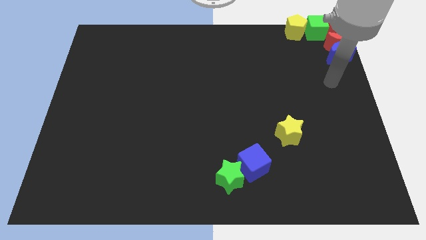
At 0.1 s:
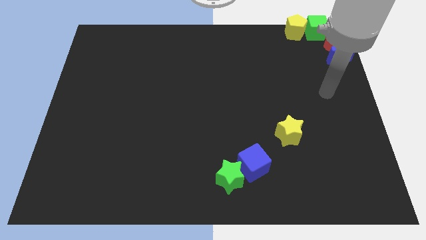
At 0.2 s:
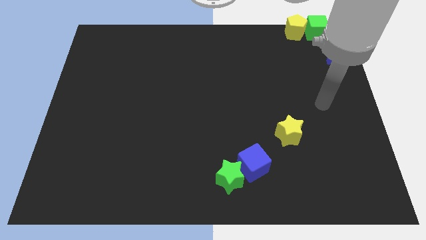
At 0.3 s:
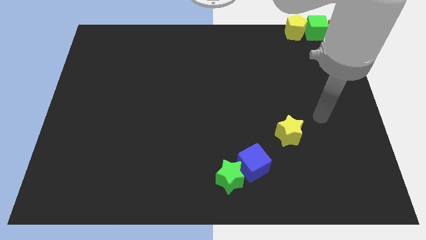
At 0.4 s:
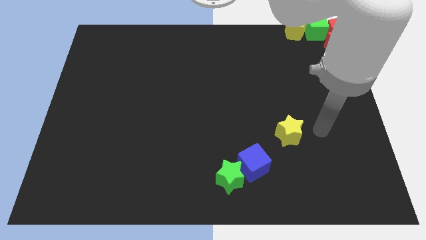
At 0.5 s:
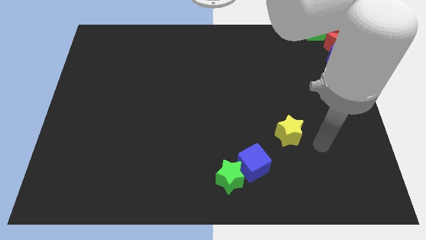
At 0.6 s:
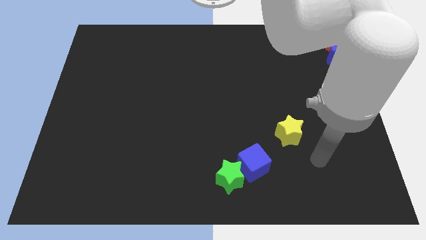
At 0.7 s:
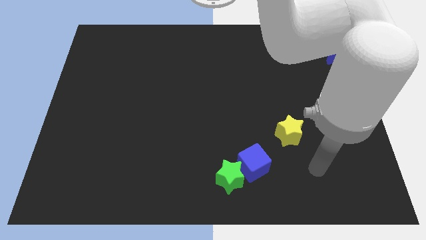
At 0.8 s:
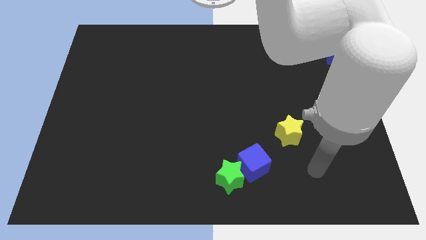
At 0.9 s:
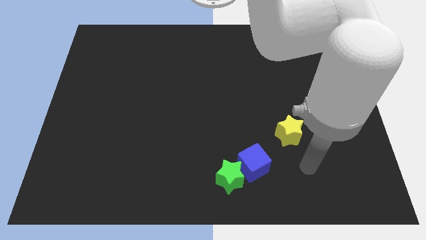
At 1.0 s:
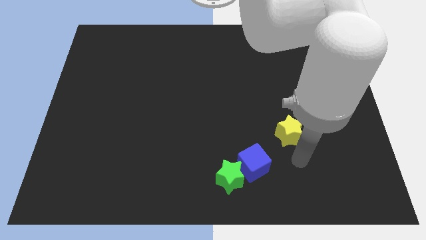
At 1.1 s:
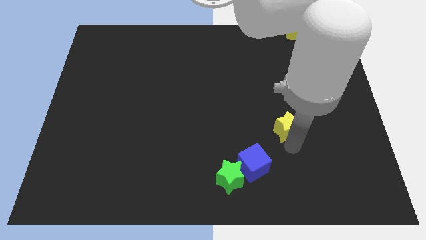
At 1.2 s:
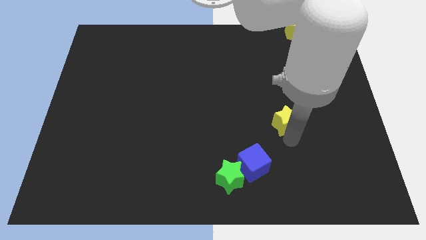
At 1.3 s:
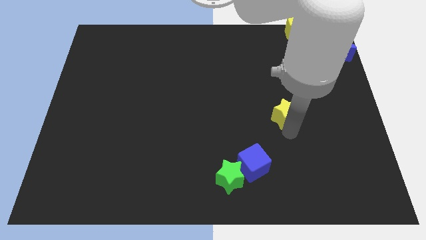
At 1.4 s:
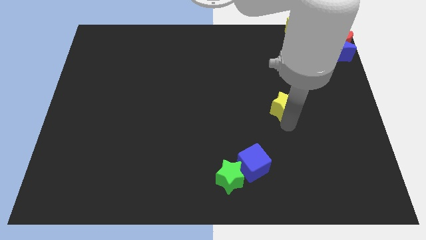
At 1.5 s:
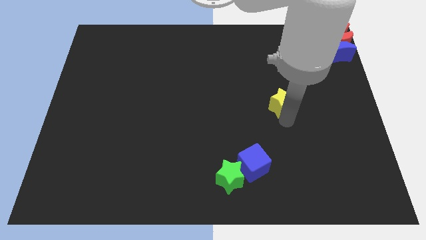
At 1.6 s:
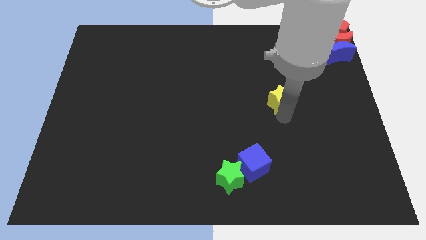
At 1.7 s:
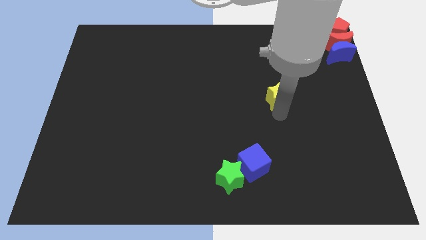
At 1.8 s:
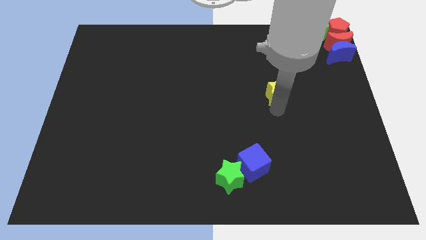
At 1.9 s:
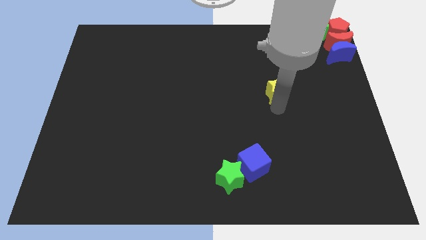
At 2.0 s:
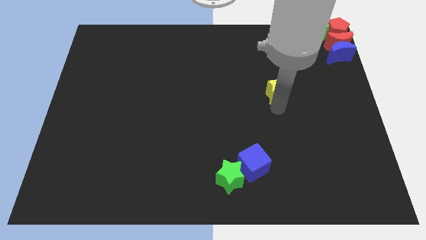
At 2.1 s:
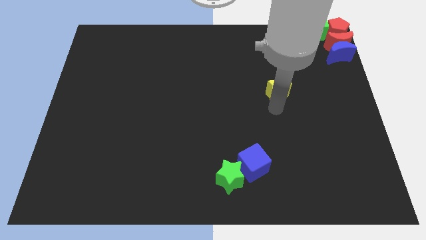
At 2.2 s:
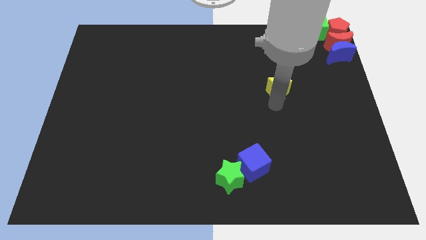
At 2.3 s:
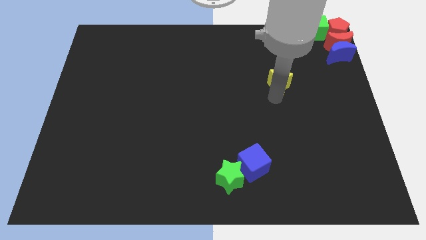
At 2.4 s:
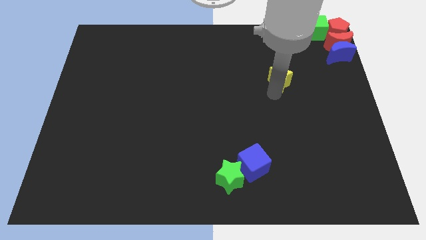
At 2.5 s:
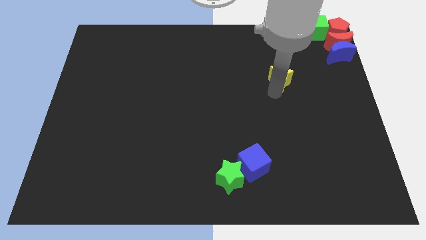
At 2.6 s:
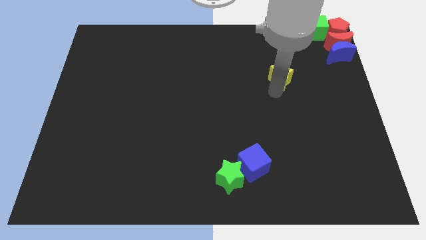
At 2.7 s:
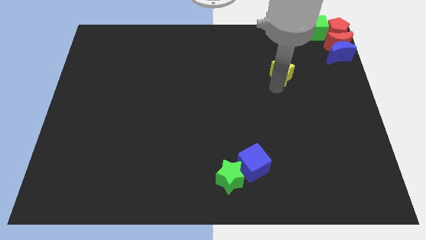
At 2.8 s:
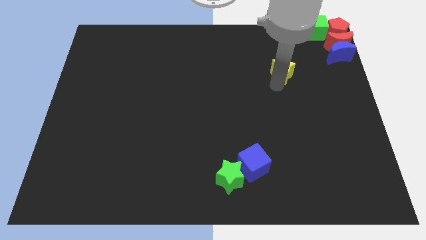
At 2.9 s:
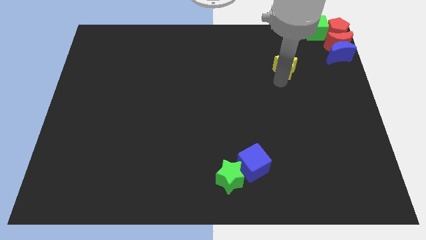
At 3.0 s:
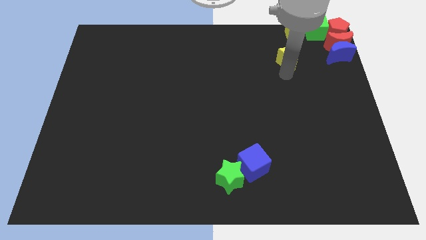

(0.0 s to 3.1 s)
move the yellow star slightly towards up

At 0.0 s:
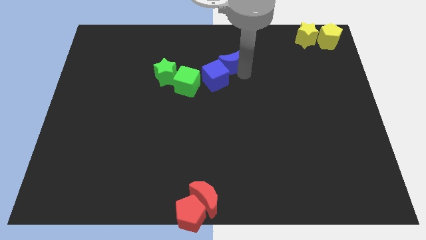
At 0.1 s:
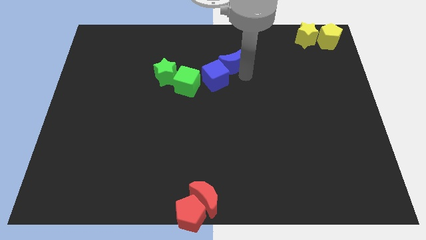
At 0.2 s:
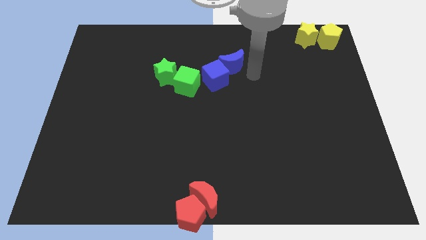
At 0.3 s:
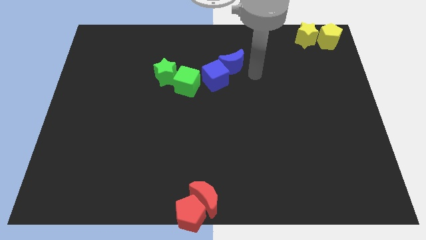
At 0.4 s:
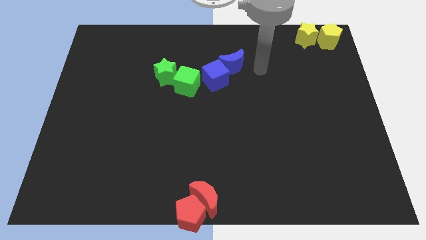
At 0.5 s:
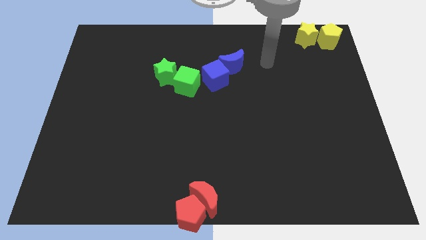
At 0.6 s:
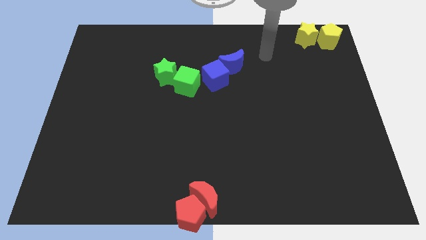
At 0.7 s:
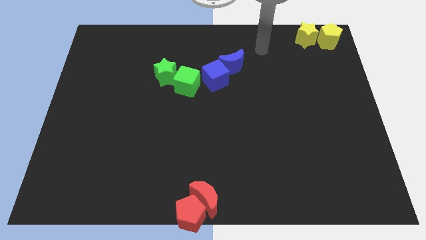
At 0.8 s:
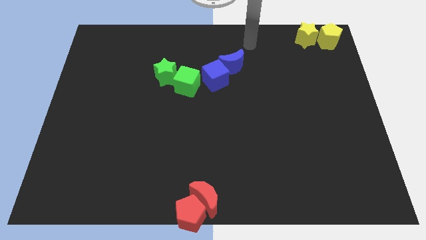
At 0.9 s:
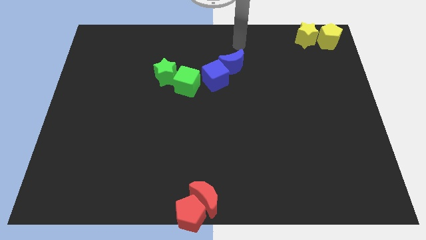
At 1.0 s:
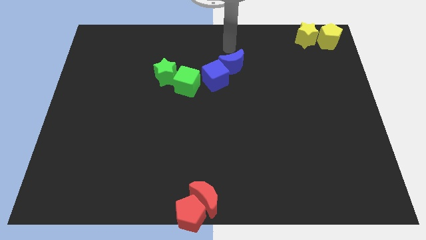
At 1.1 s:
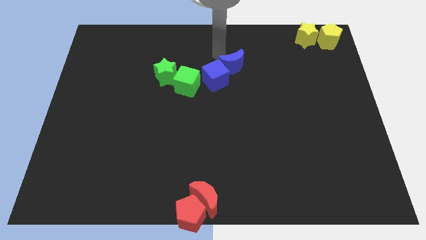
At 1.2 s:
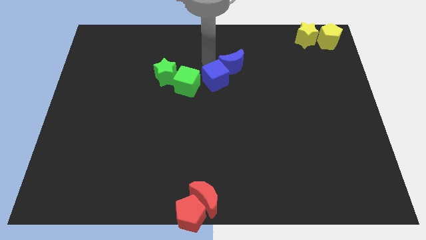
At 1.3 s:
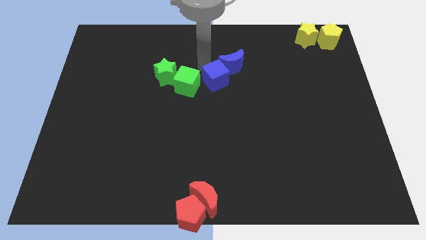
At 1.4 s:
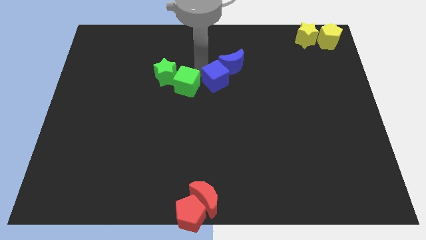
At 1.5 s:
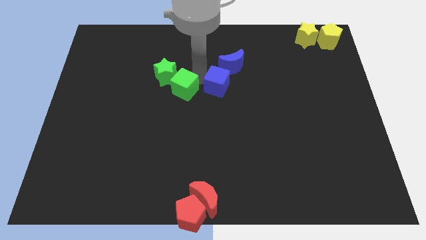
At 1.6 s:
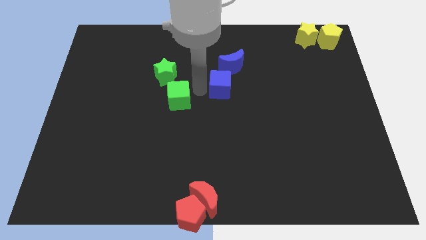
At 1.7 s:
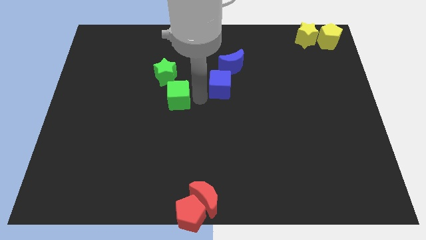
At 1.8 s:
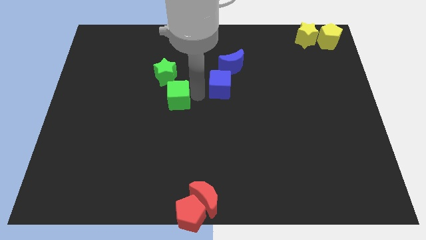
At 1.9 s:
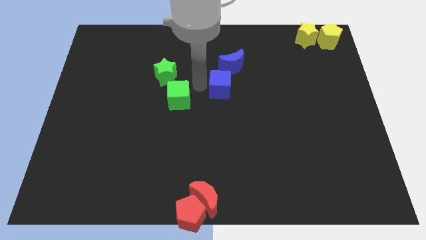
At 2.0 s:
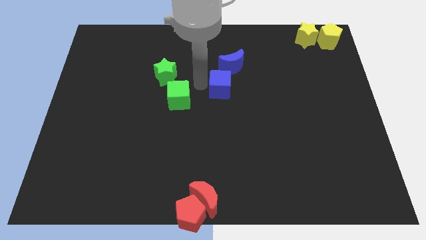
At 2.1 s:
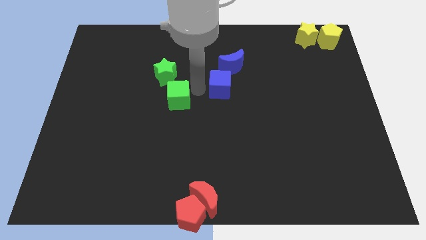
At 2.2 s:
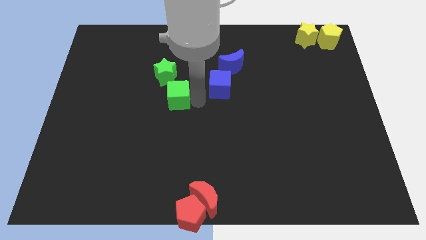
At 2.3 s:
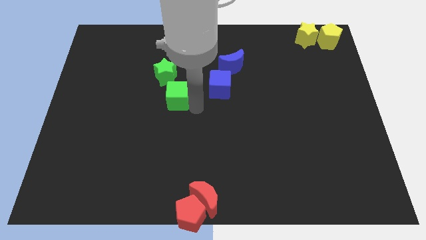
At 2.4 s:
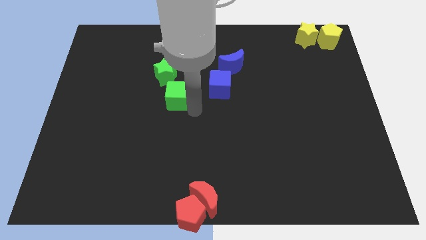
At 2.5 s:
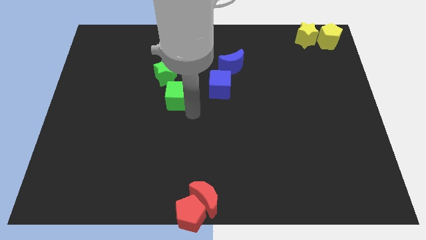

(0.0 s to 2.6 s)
seperate the green and blue cubes away from each other

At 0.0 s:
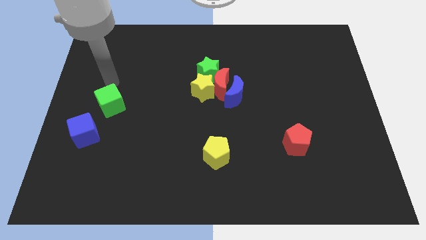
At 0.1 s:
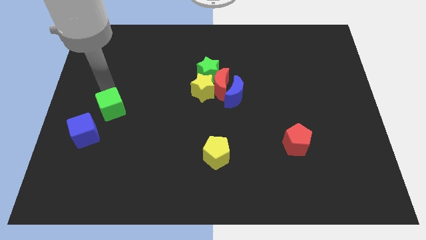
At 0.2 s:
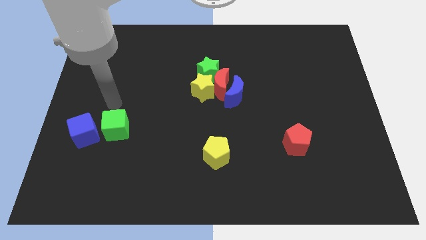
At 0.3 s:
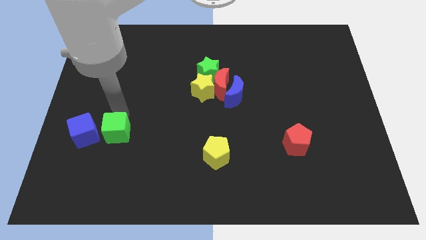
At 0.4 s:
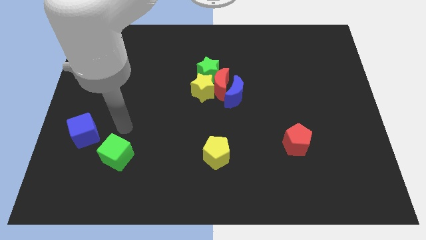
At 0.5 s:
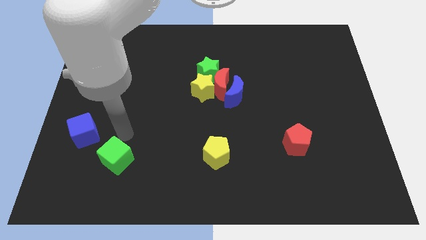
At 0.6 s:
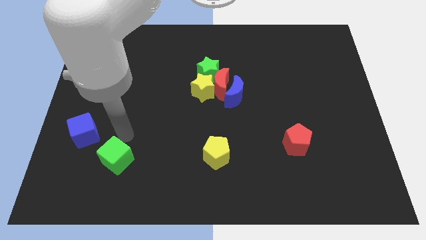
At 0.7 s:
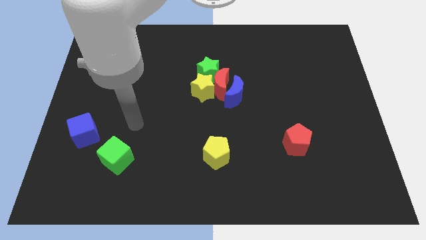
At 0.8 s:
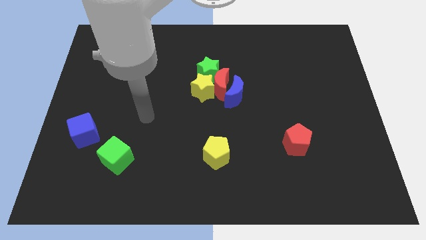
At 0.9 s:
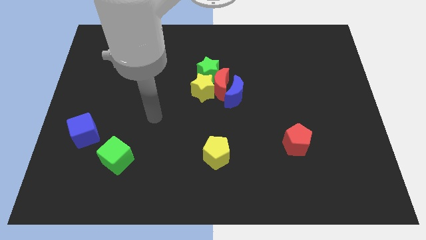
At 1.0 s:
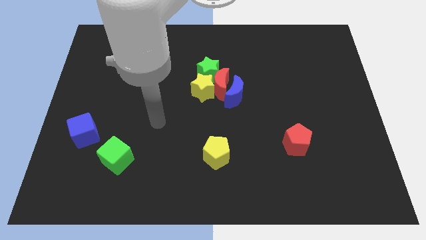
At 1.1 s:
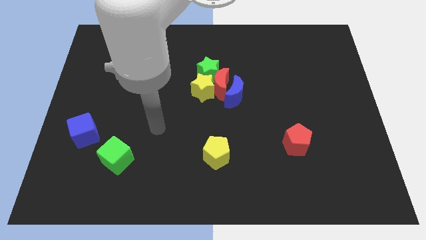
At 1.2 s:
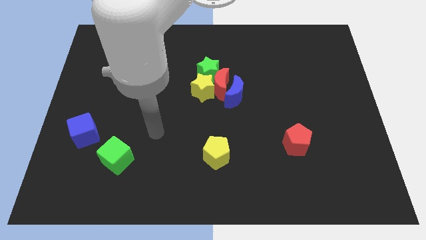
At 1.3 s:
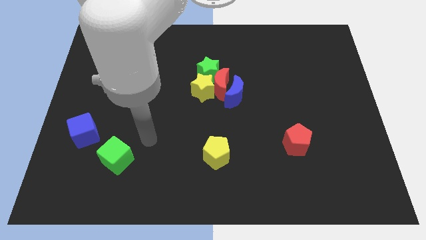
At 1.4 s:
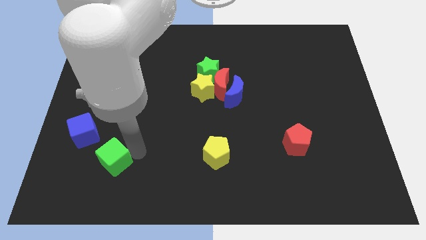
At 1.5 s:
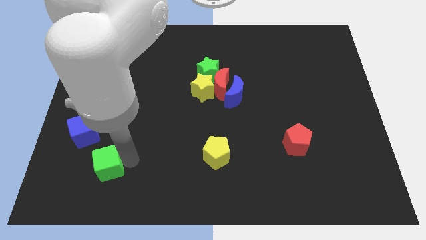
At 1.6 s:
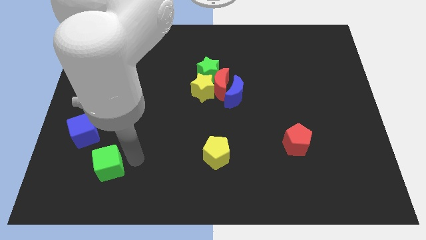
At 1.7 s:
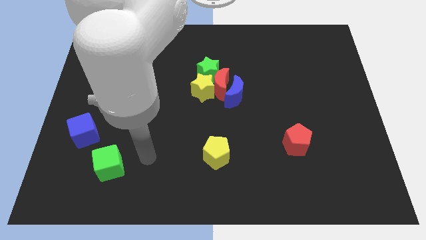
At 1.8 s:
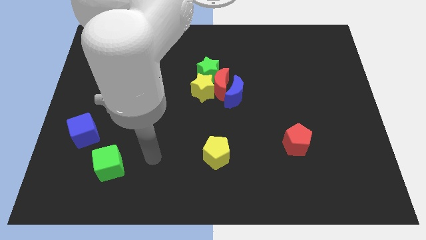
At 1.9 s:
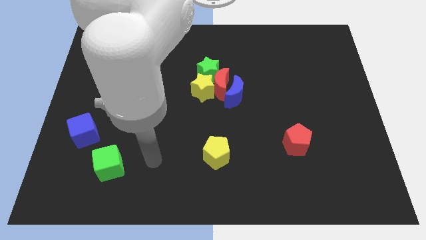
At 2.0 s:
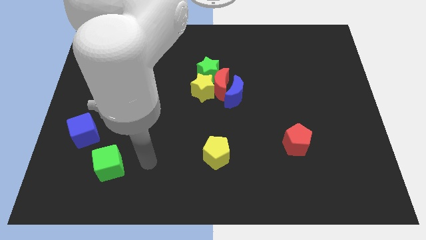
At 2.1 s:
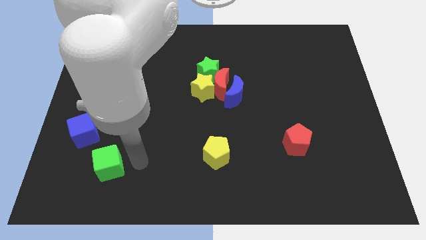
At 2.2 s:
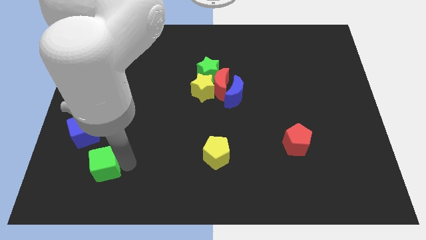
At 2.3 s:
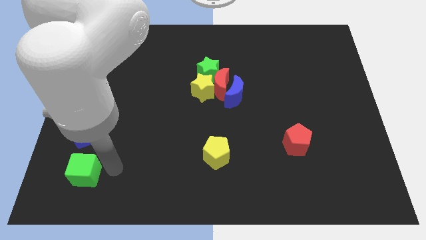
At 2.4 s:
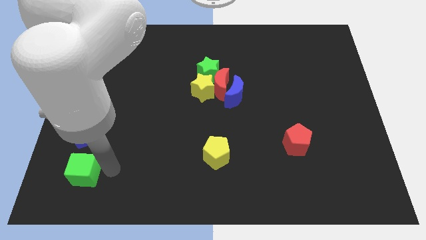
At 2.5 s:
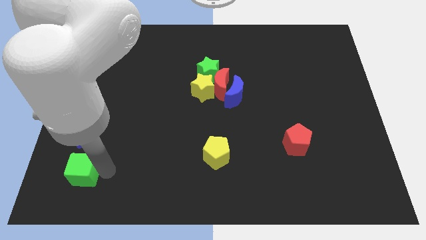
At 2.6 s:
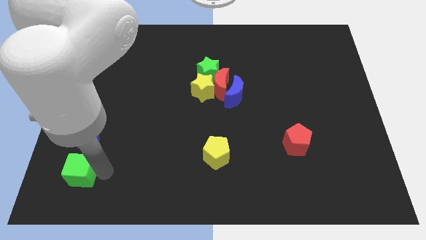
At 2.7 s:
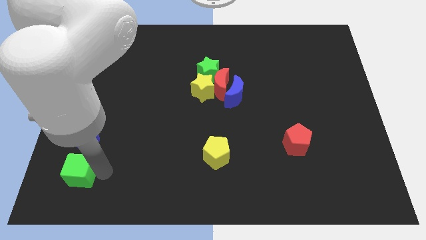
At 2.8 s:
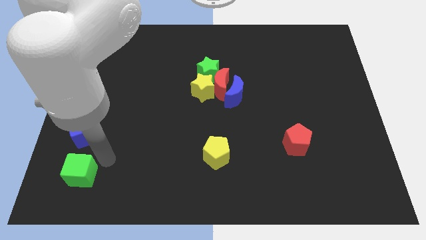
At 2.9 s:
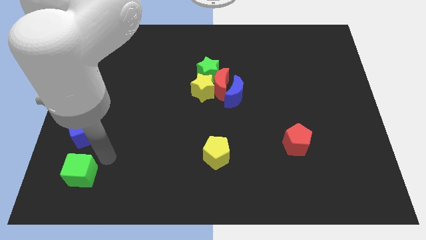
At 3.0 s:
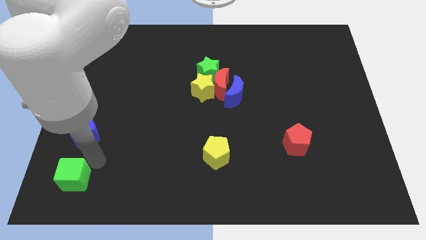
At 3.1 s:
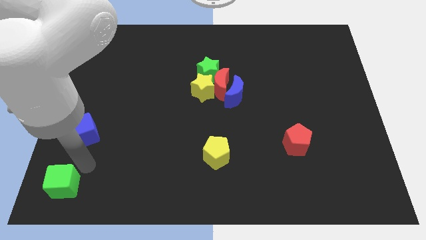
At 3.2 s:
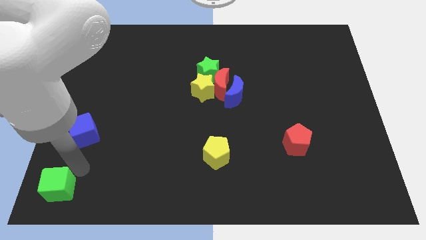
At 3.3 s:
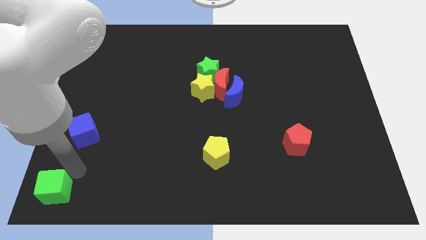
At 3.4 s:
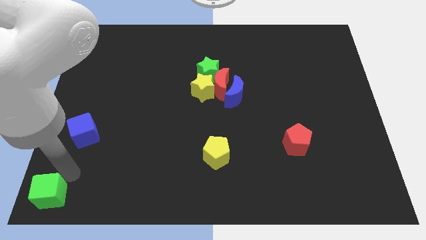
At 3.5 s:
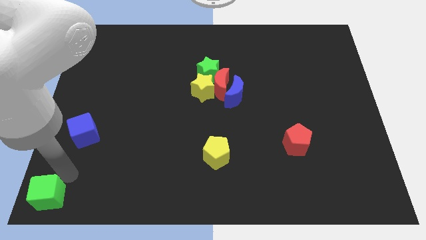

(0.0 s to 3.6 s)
move green cube to the bottom left
